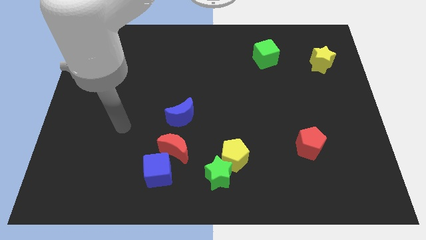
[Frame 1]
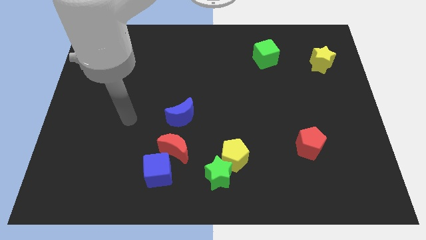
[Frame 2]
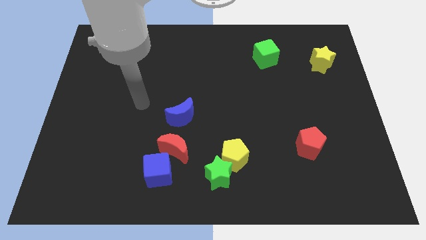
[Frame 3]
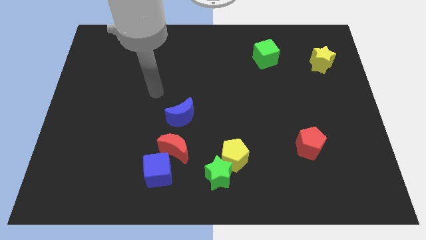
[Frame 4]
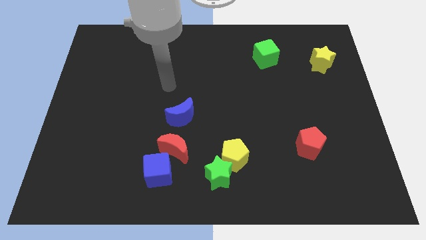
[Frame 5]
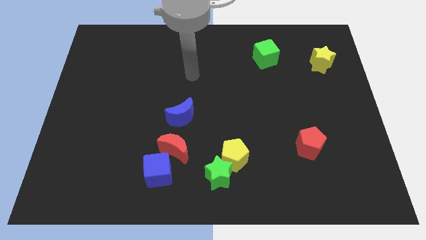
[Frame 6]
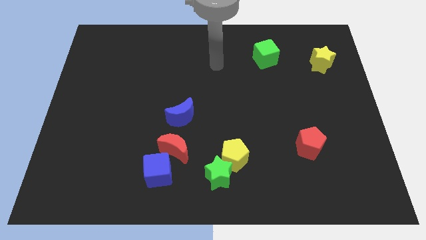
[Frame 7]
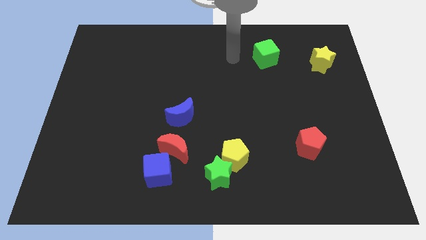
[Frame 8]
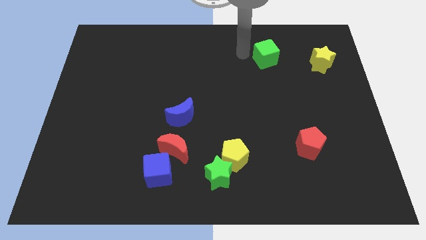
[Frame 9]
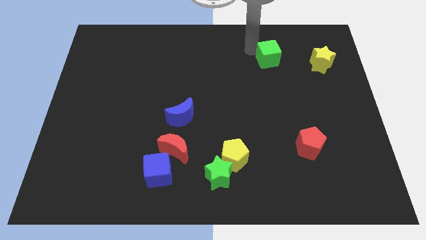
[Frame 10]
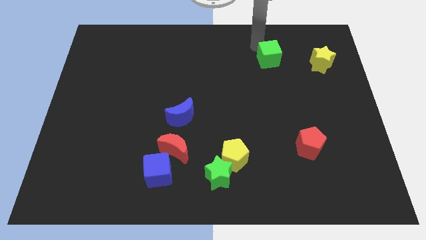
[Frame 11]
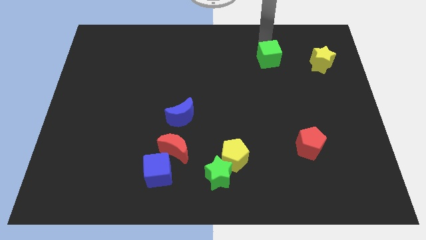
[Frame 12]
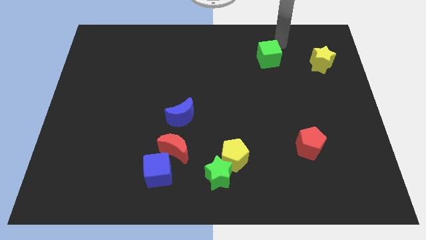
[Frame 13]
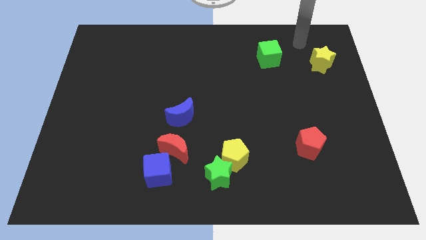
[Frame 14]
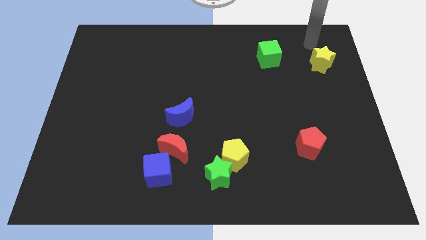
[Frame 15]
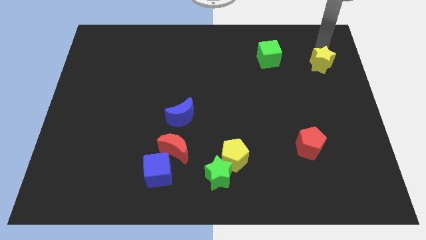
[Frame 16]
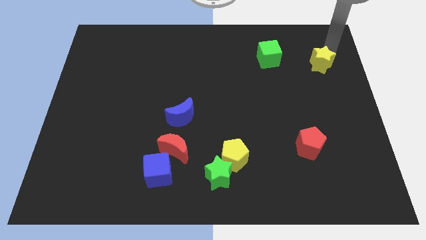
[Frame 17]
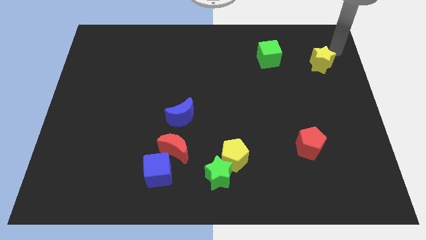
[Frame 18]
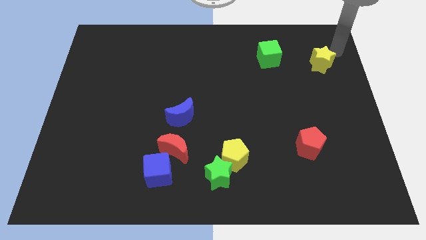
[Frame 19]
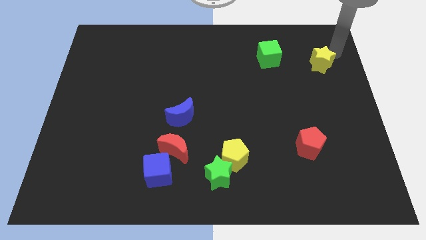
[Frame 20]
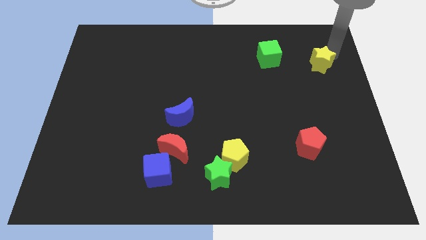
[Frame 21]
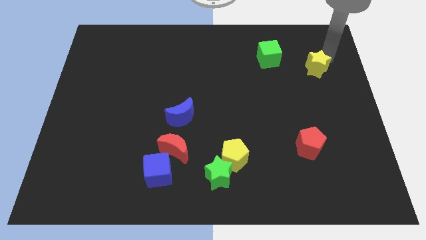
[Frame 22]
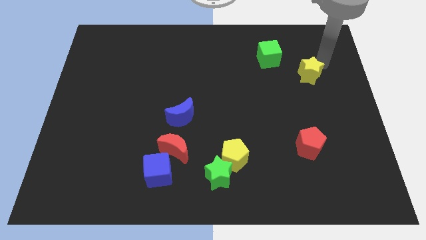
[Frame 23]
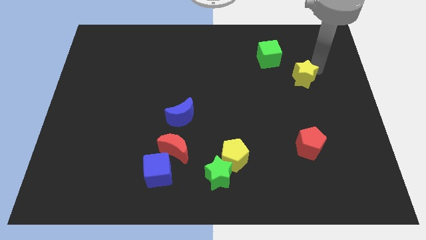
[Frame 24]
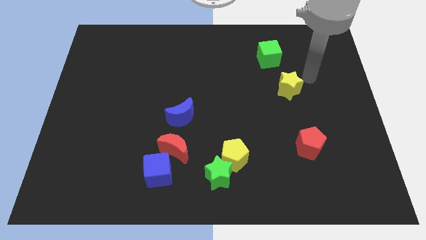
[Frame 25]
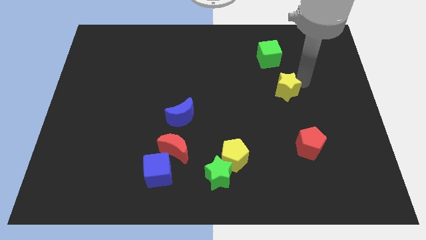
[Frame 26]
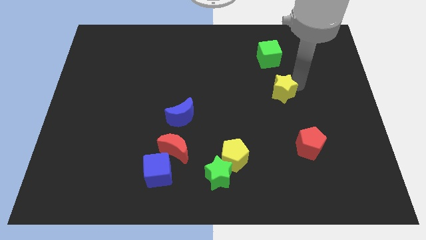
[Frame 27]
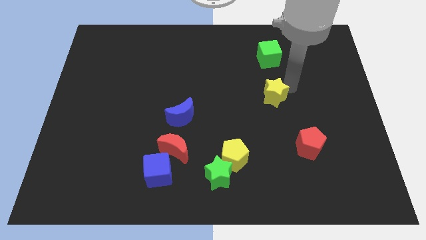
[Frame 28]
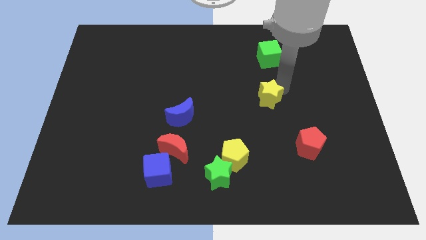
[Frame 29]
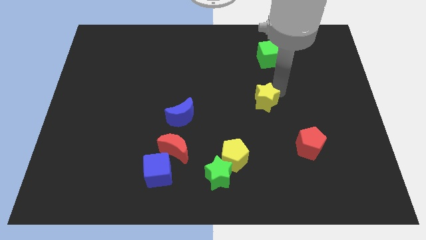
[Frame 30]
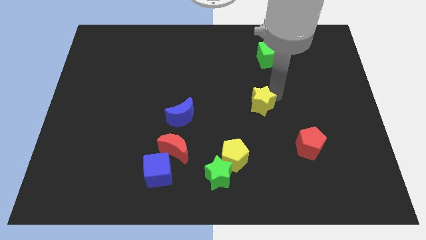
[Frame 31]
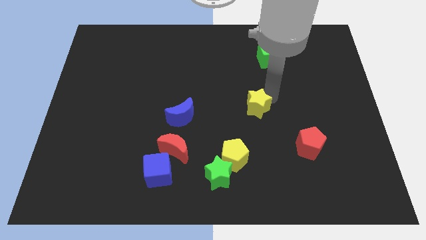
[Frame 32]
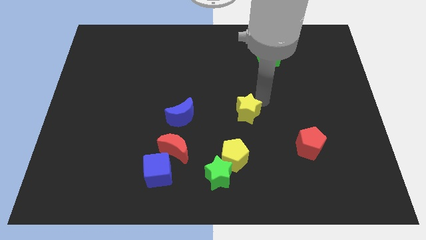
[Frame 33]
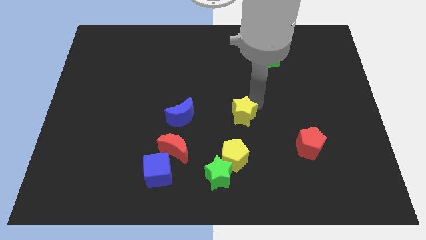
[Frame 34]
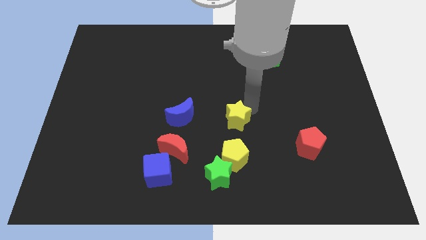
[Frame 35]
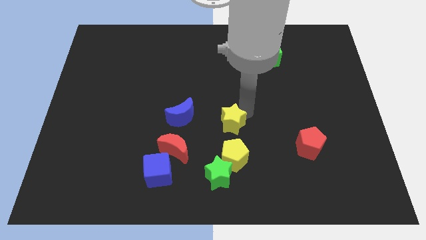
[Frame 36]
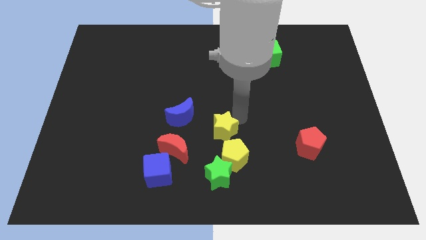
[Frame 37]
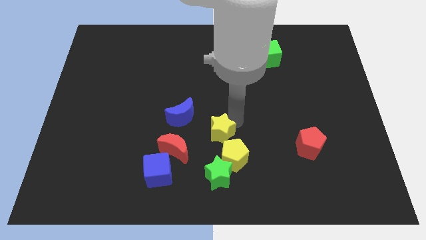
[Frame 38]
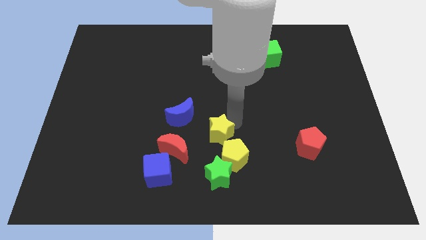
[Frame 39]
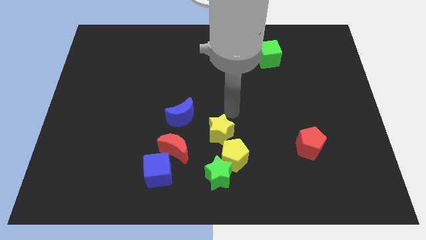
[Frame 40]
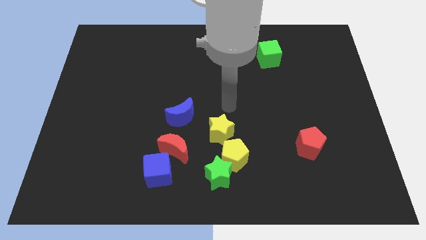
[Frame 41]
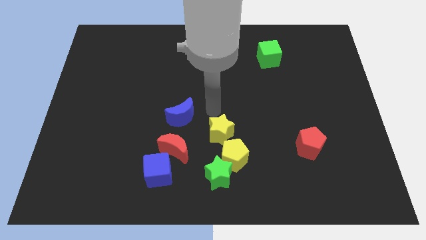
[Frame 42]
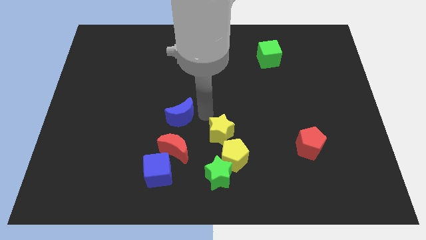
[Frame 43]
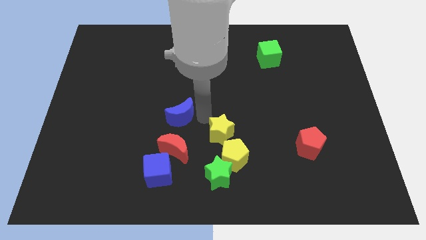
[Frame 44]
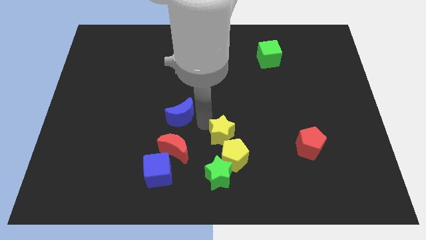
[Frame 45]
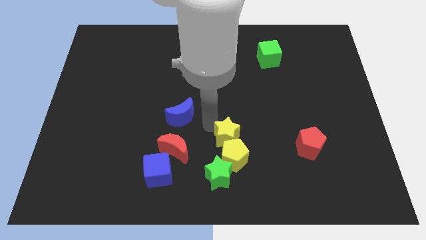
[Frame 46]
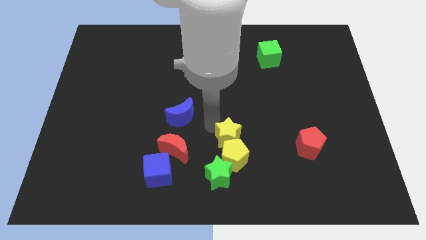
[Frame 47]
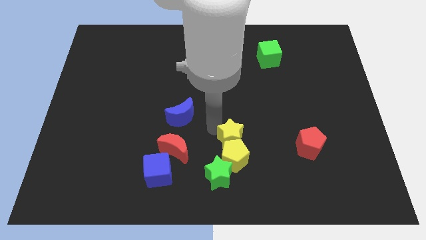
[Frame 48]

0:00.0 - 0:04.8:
move the yellow star to the yellow pentagon

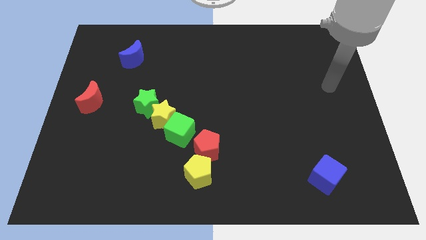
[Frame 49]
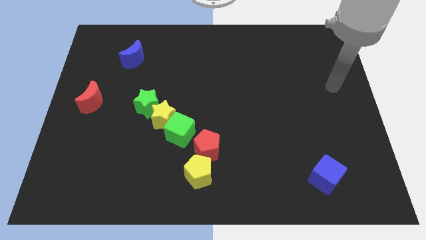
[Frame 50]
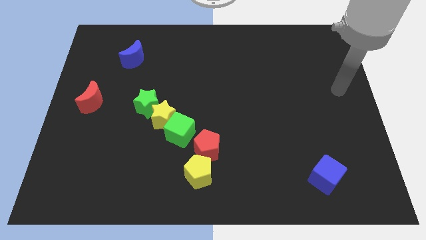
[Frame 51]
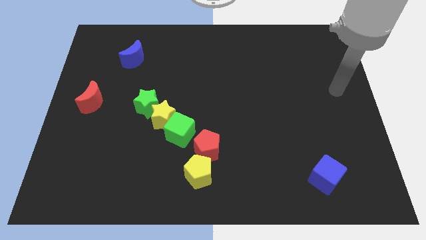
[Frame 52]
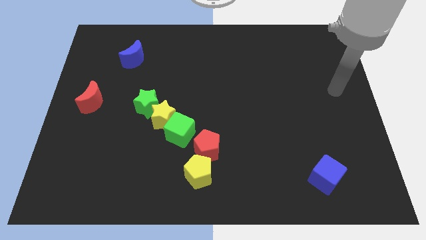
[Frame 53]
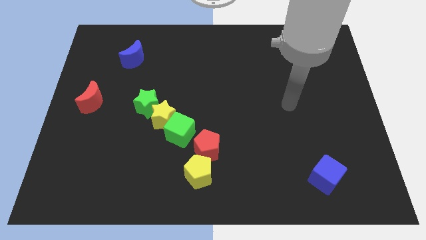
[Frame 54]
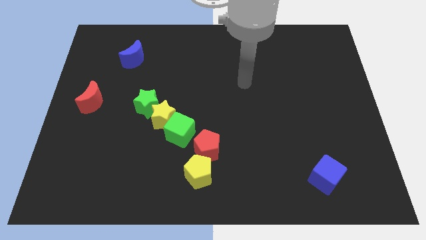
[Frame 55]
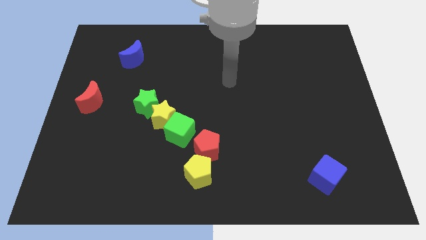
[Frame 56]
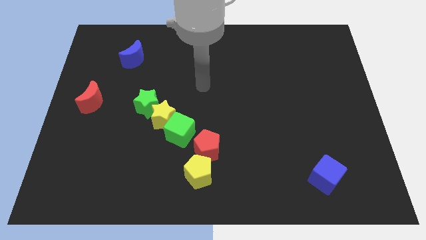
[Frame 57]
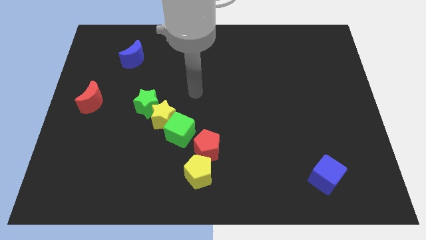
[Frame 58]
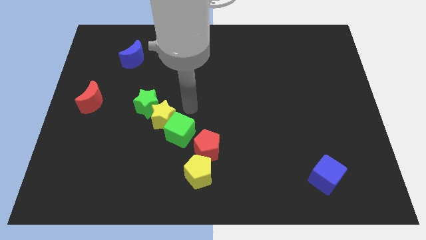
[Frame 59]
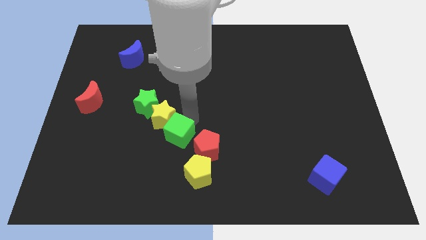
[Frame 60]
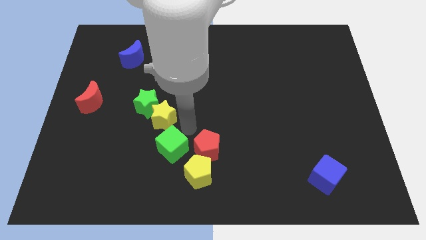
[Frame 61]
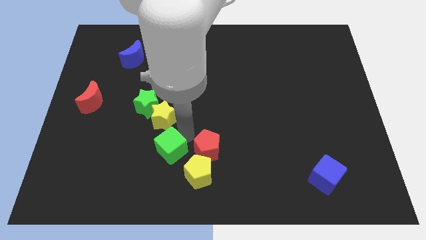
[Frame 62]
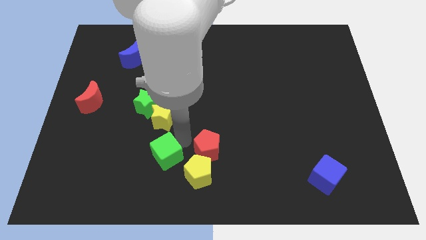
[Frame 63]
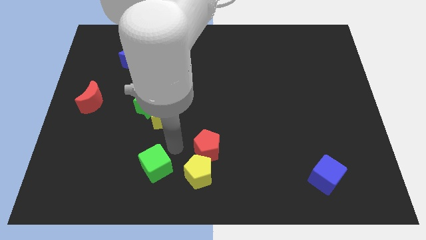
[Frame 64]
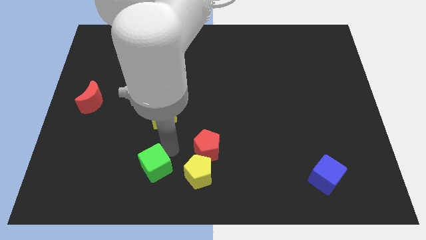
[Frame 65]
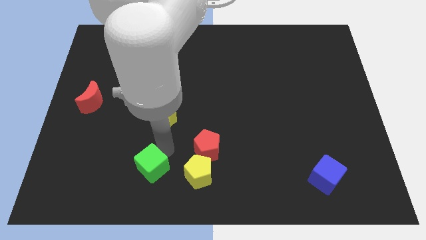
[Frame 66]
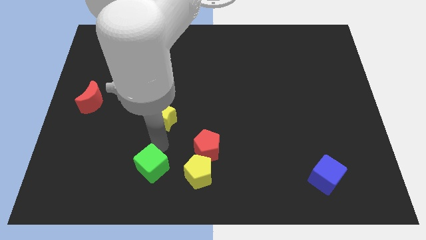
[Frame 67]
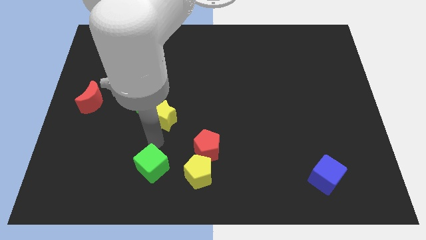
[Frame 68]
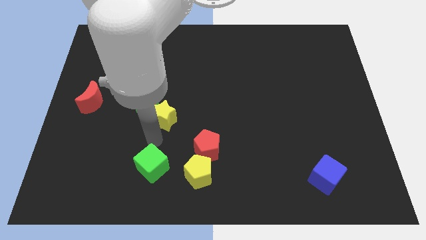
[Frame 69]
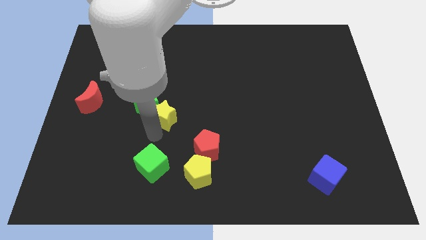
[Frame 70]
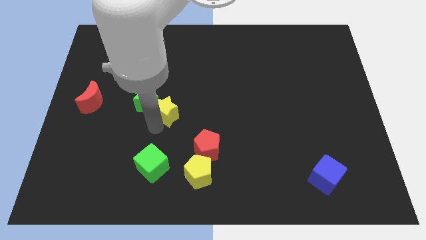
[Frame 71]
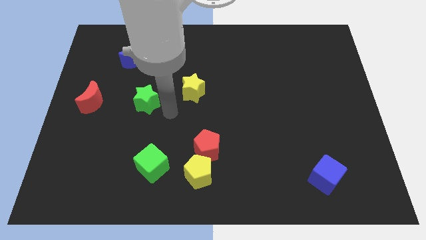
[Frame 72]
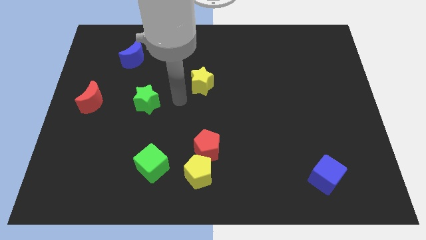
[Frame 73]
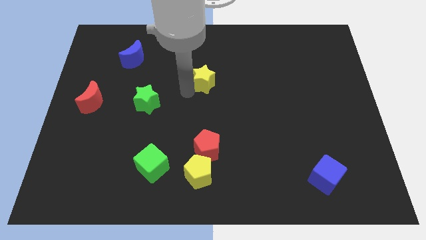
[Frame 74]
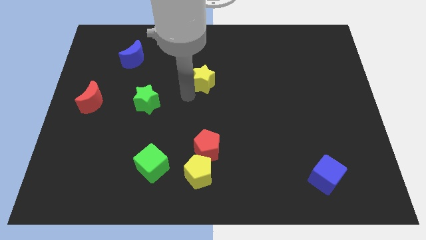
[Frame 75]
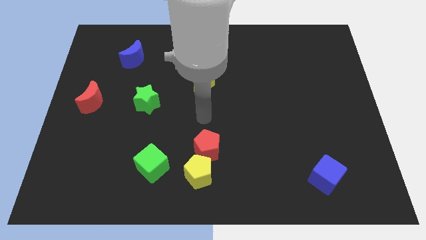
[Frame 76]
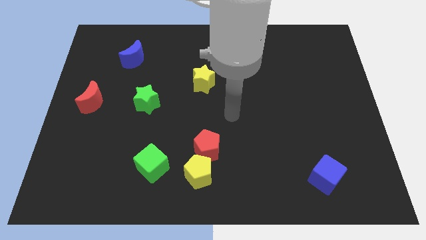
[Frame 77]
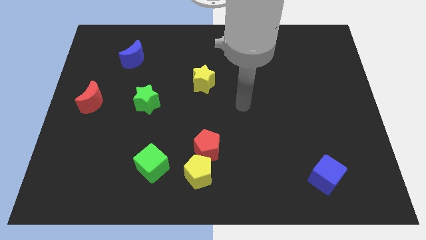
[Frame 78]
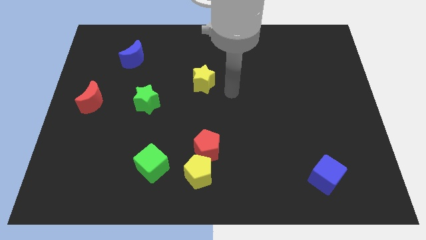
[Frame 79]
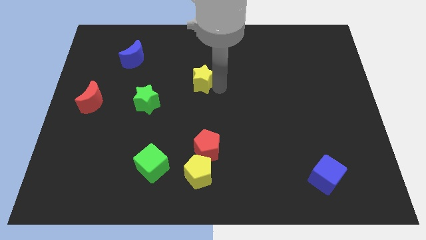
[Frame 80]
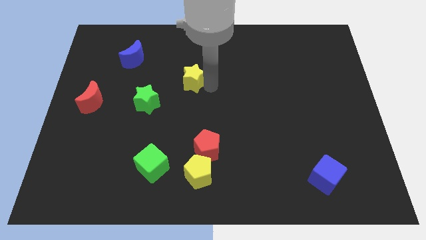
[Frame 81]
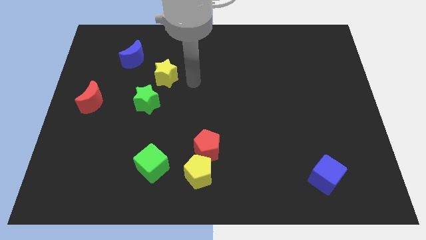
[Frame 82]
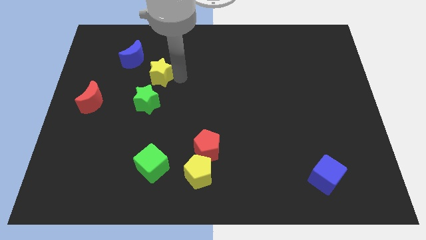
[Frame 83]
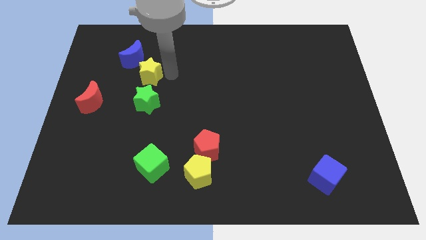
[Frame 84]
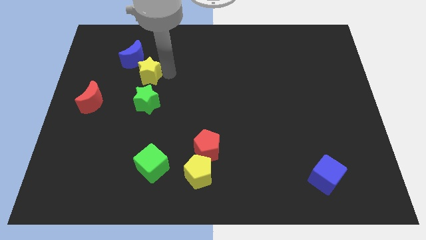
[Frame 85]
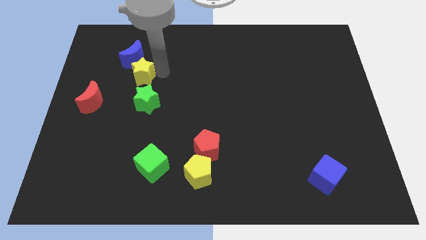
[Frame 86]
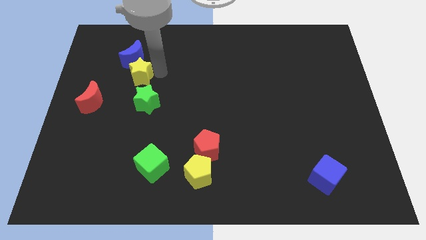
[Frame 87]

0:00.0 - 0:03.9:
slide the yellow star towards the blue moon
